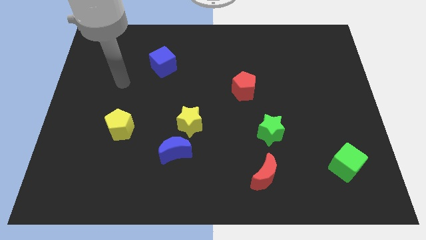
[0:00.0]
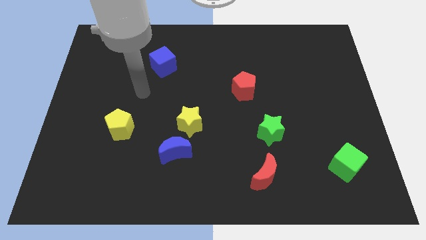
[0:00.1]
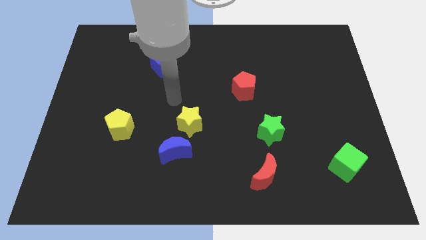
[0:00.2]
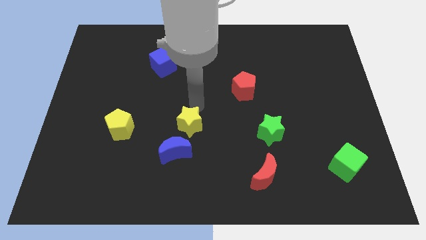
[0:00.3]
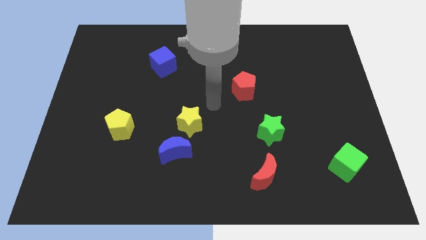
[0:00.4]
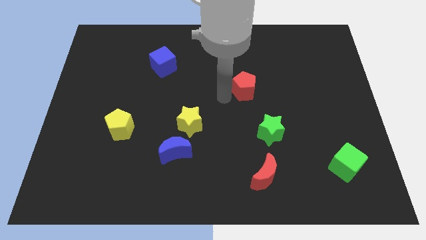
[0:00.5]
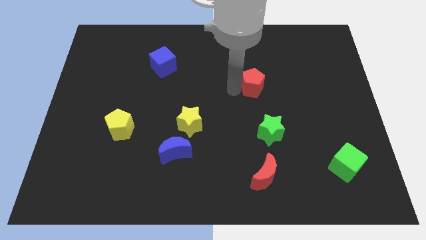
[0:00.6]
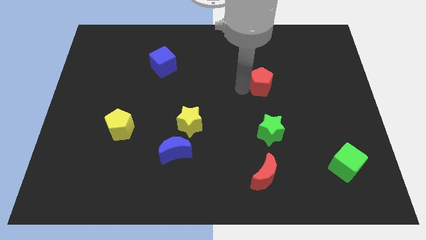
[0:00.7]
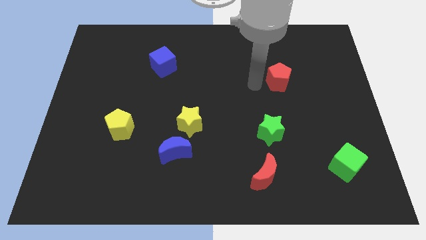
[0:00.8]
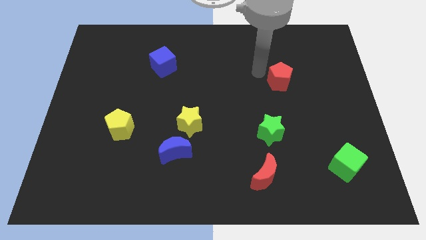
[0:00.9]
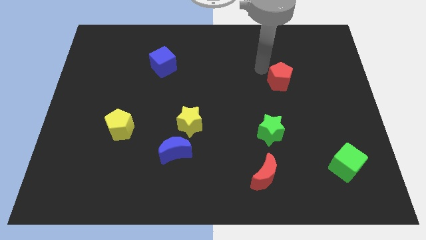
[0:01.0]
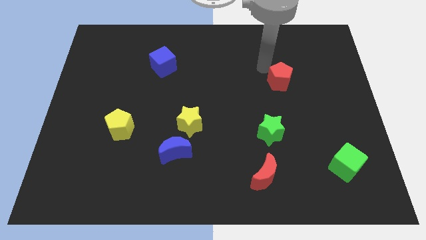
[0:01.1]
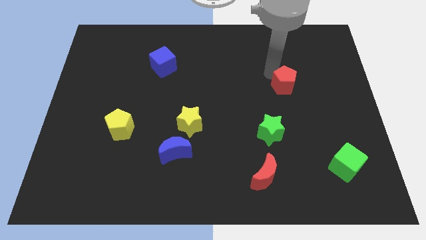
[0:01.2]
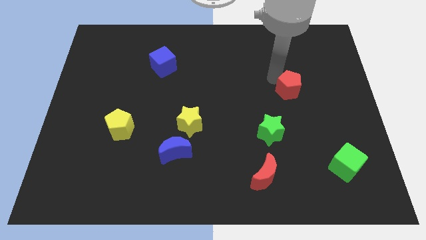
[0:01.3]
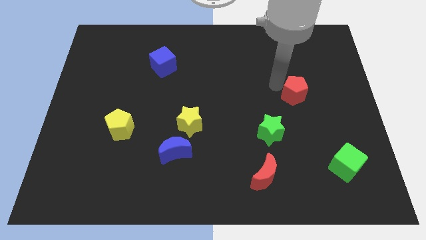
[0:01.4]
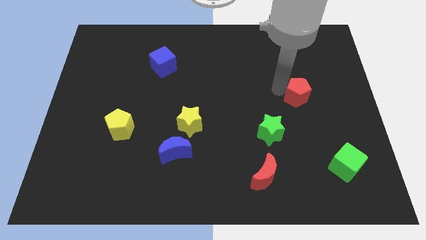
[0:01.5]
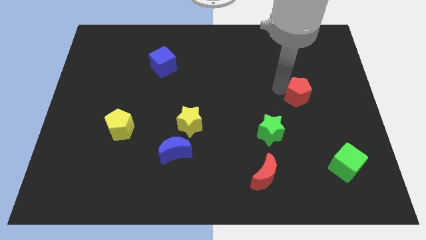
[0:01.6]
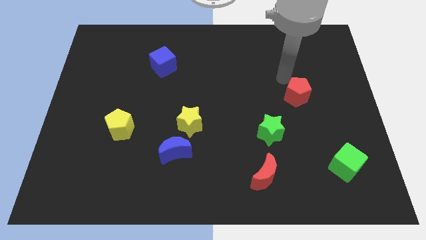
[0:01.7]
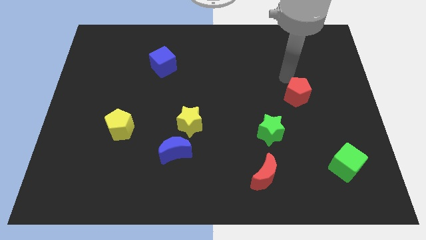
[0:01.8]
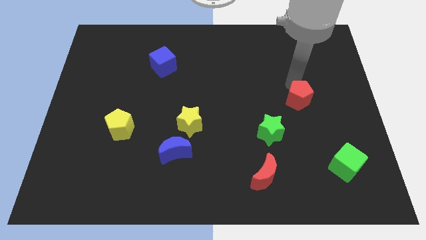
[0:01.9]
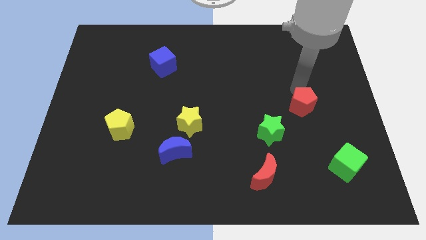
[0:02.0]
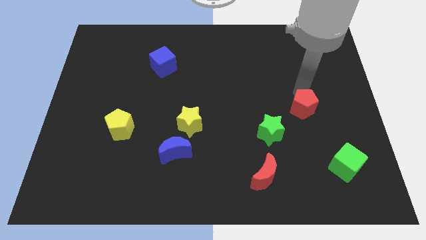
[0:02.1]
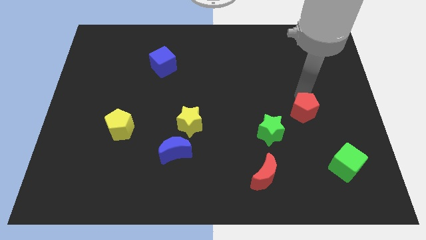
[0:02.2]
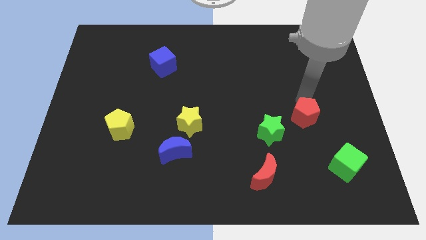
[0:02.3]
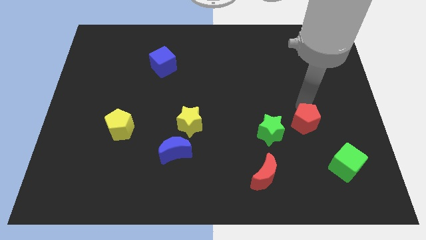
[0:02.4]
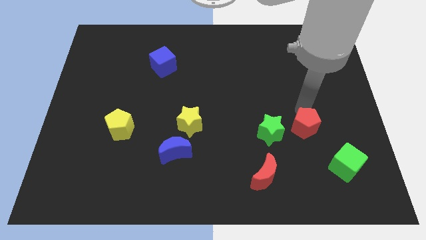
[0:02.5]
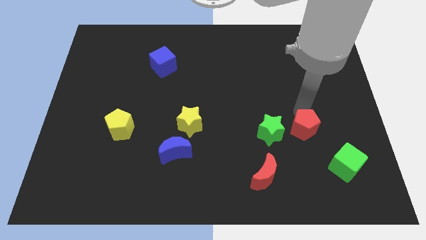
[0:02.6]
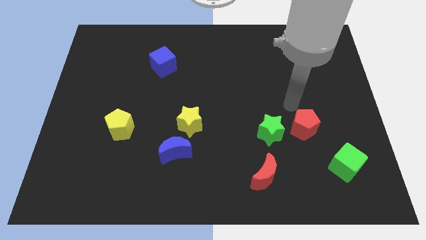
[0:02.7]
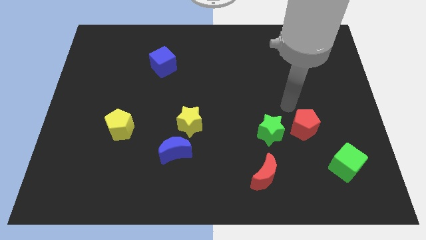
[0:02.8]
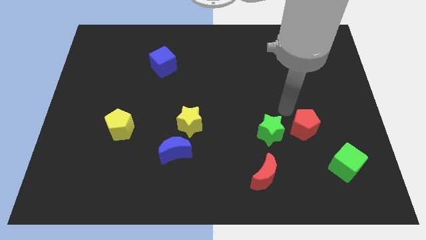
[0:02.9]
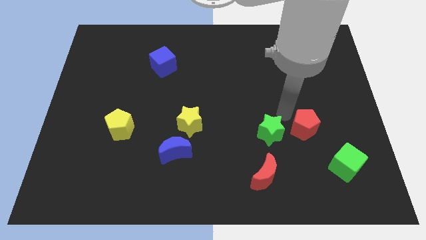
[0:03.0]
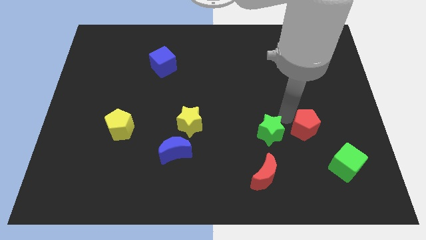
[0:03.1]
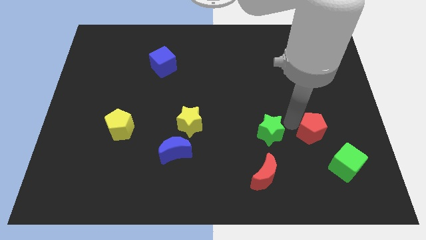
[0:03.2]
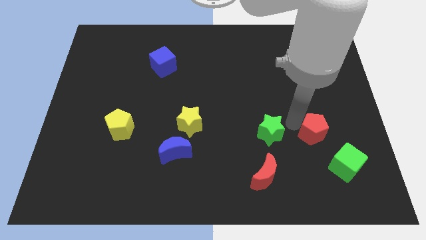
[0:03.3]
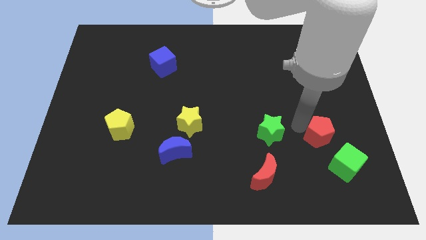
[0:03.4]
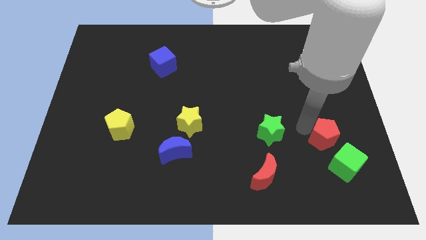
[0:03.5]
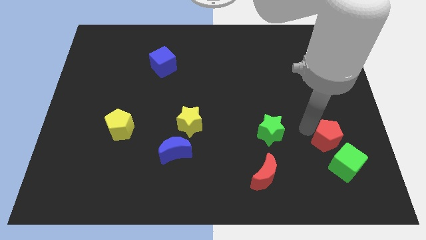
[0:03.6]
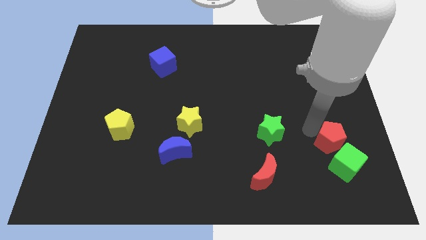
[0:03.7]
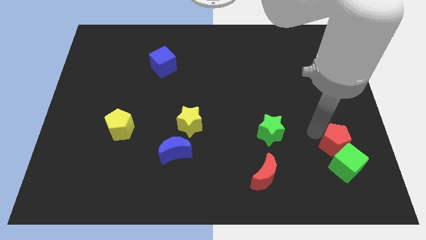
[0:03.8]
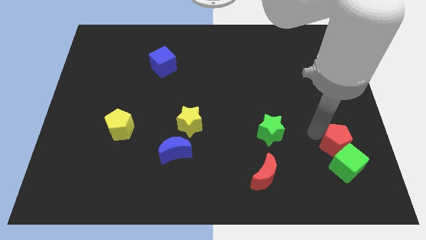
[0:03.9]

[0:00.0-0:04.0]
push the red pentagon next to the green cube

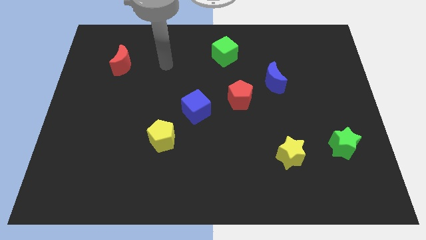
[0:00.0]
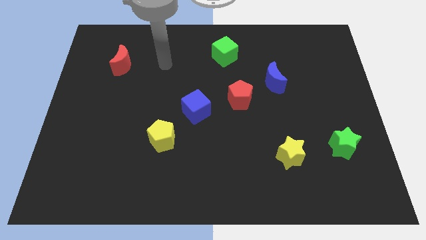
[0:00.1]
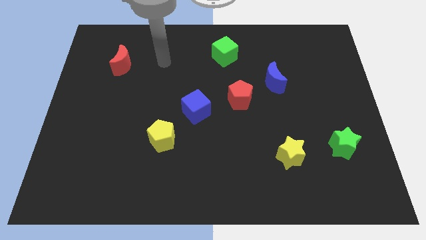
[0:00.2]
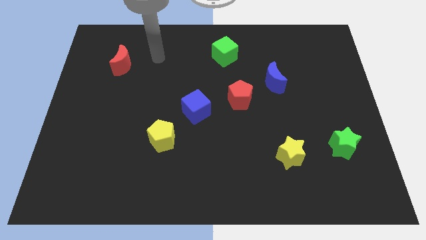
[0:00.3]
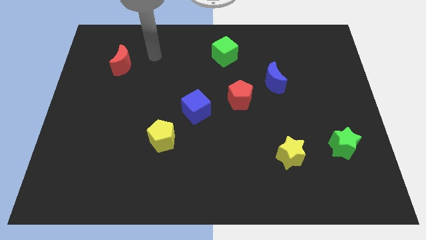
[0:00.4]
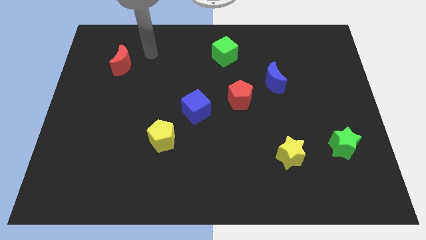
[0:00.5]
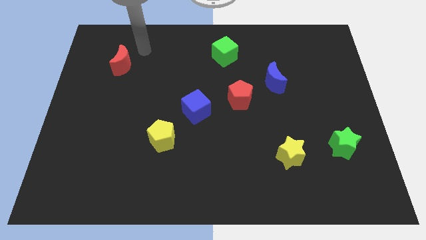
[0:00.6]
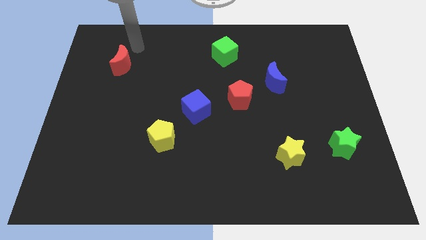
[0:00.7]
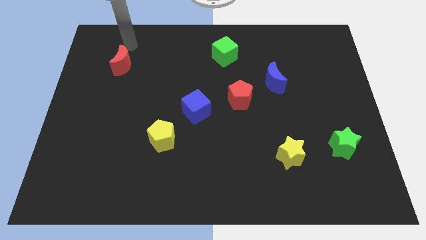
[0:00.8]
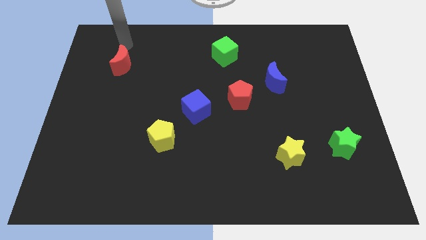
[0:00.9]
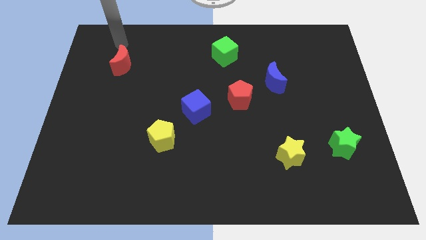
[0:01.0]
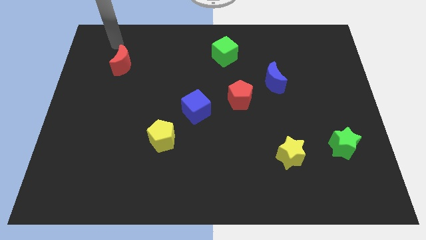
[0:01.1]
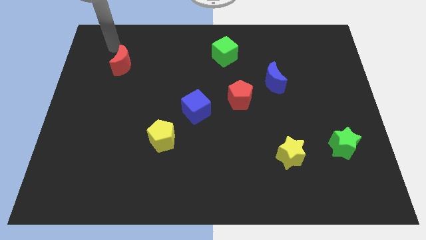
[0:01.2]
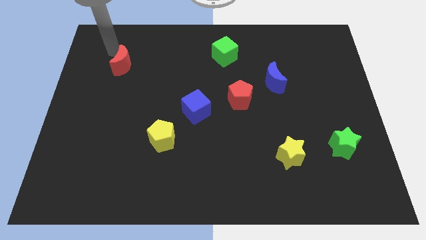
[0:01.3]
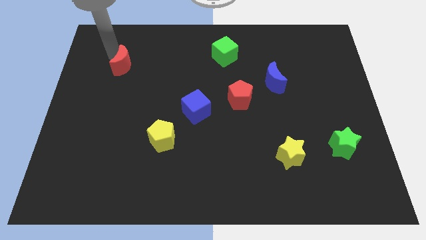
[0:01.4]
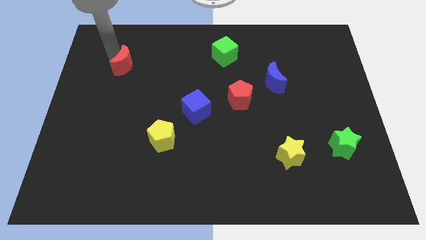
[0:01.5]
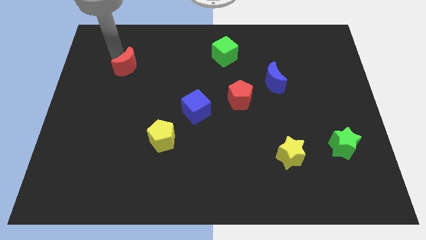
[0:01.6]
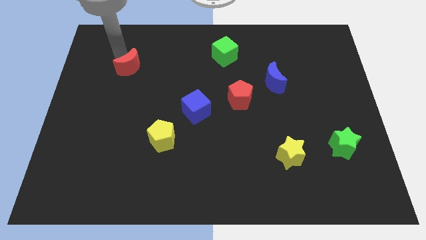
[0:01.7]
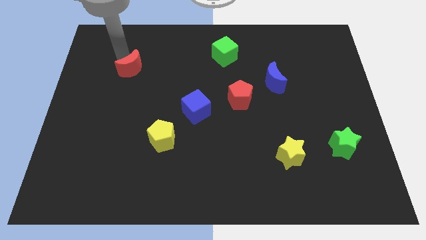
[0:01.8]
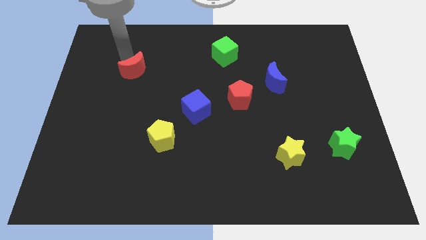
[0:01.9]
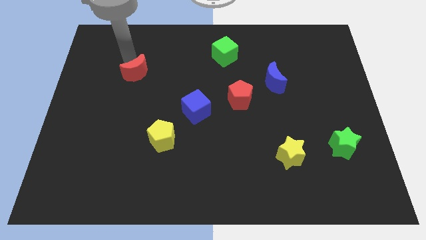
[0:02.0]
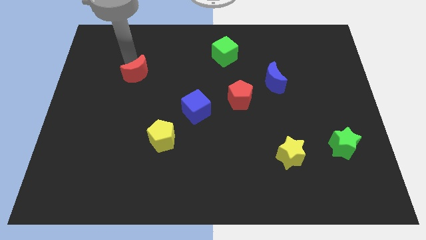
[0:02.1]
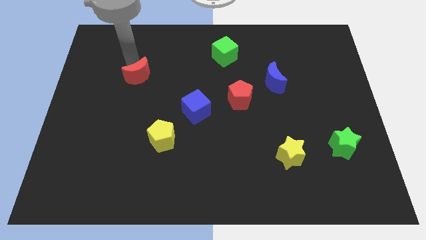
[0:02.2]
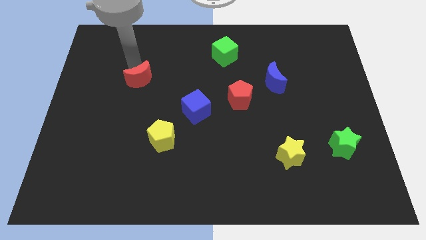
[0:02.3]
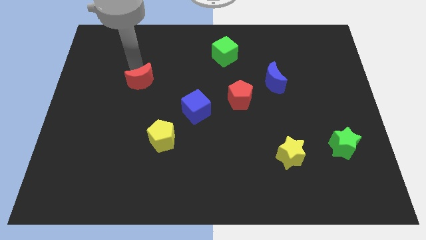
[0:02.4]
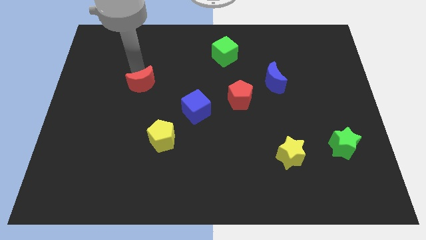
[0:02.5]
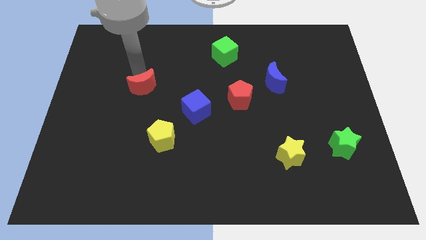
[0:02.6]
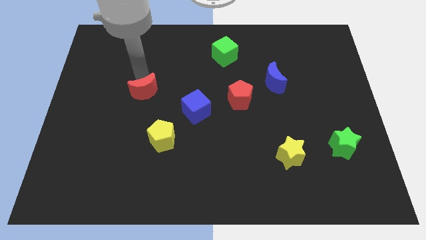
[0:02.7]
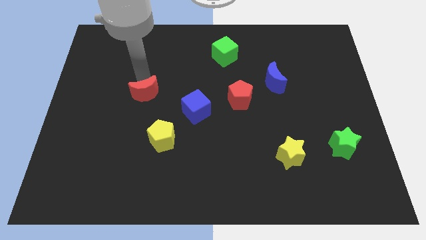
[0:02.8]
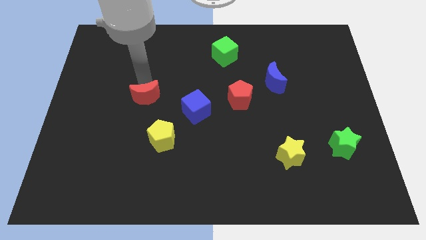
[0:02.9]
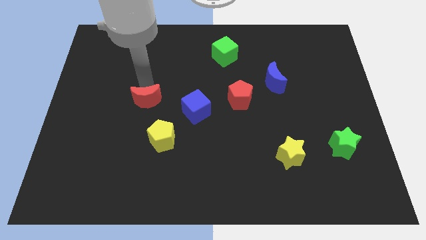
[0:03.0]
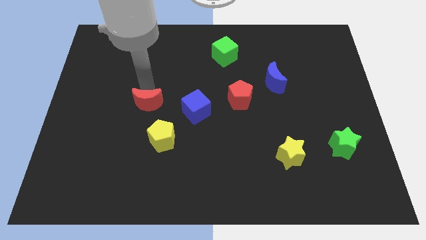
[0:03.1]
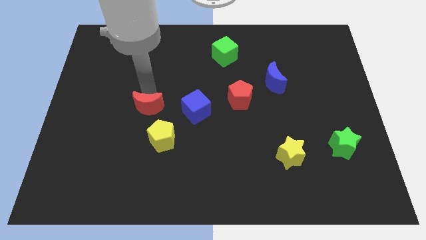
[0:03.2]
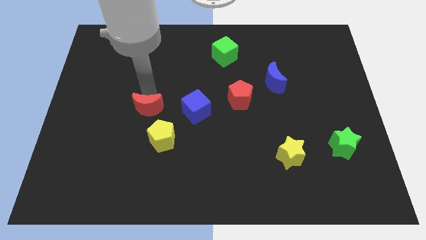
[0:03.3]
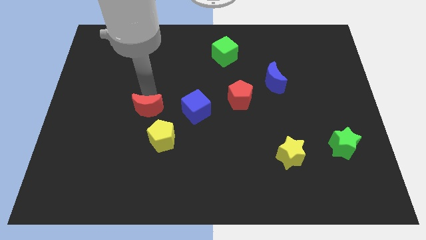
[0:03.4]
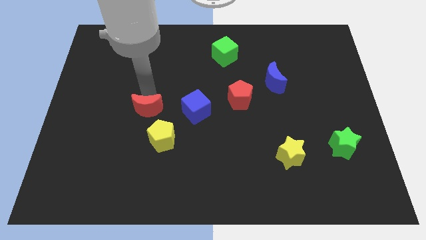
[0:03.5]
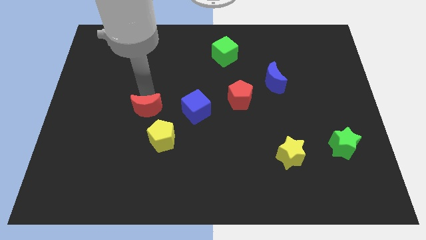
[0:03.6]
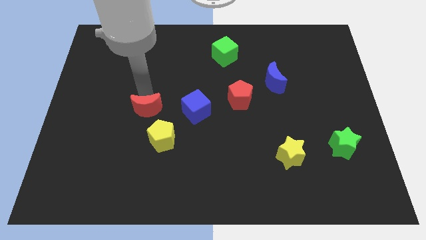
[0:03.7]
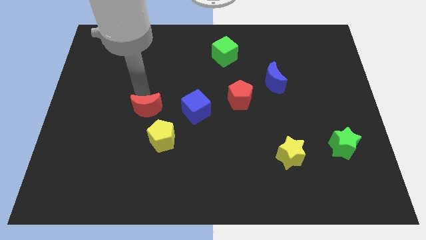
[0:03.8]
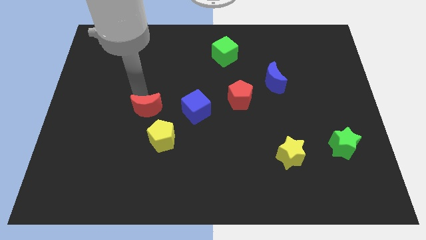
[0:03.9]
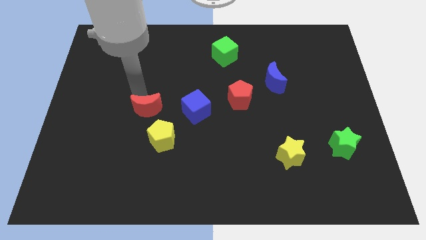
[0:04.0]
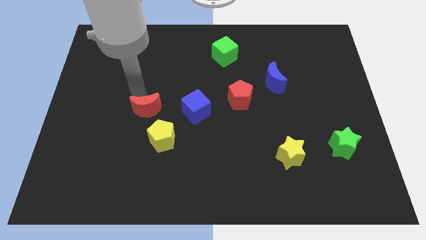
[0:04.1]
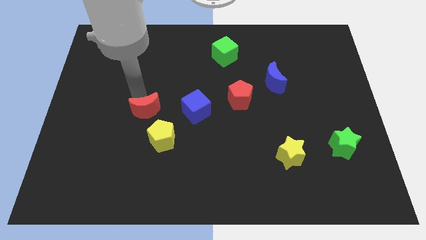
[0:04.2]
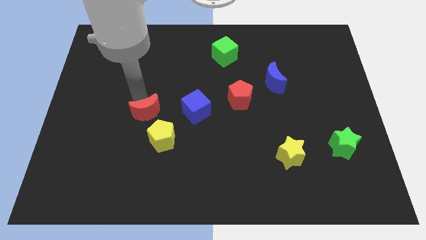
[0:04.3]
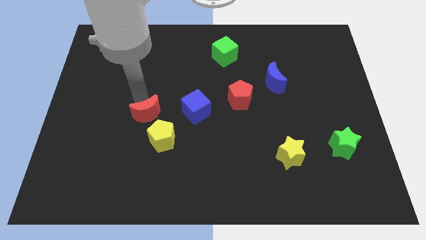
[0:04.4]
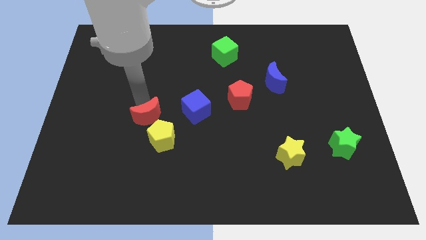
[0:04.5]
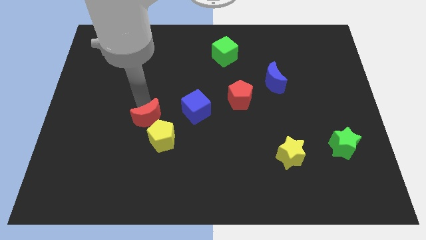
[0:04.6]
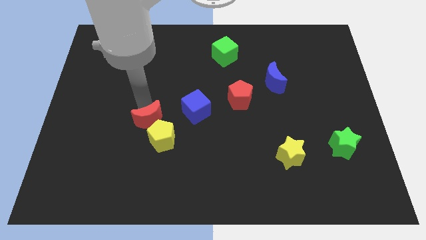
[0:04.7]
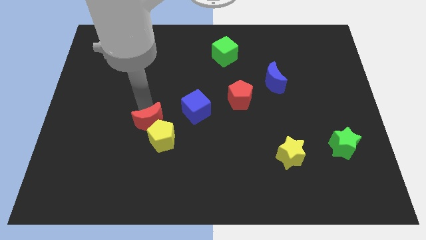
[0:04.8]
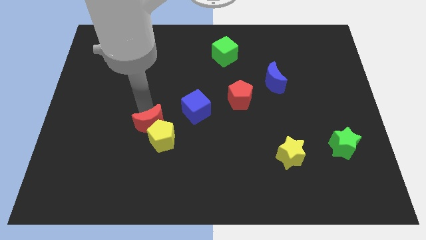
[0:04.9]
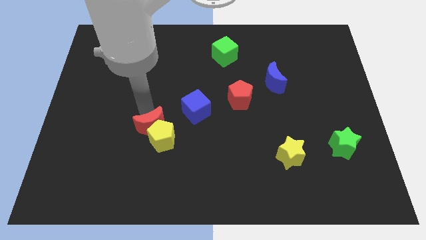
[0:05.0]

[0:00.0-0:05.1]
move the red moon towards the yellow pentagon
